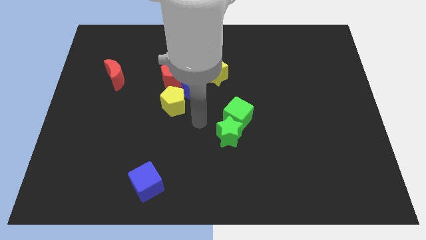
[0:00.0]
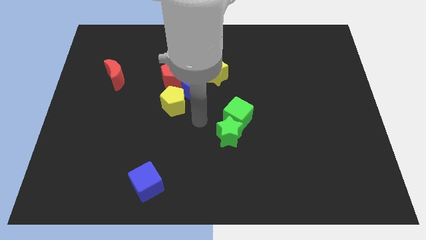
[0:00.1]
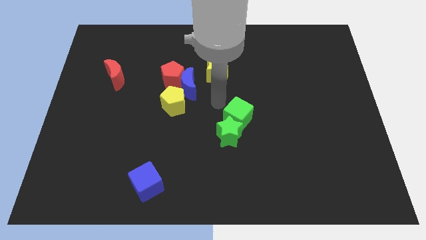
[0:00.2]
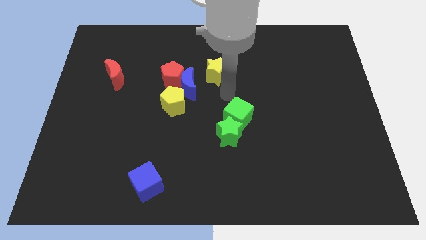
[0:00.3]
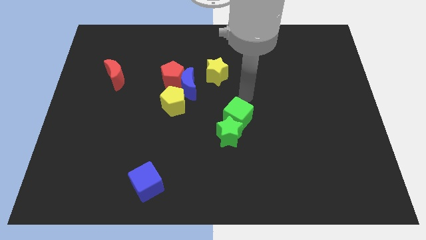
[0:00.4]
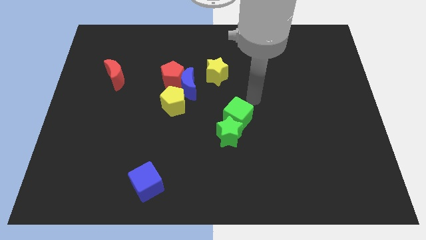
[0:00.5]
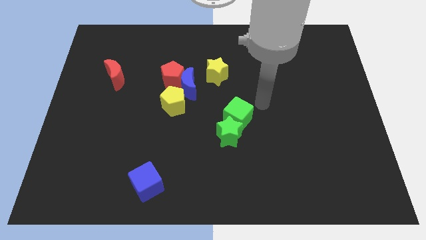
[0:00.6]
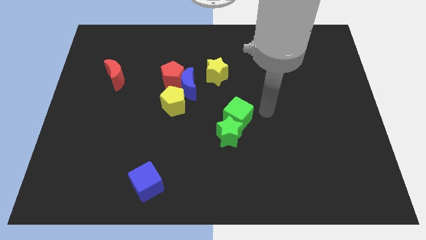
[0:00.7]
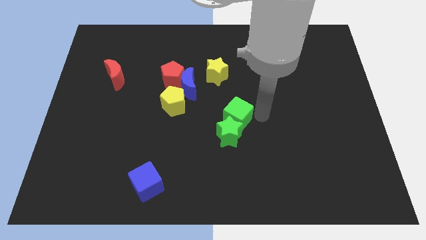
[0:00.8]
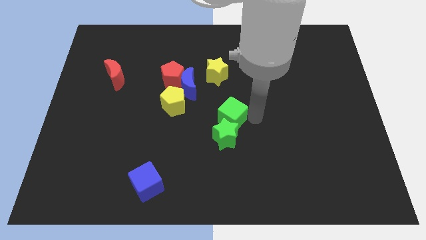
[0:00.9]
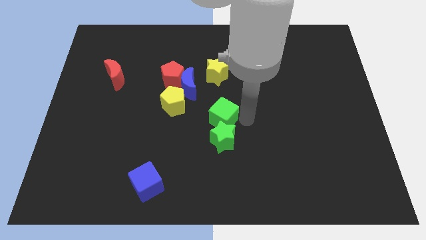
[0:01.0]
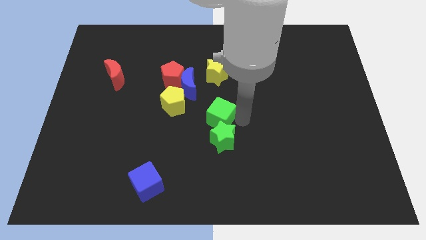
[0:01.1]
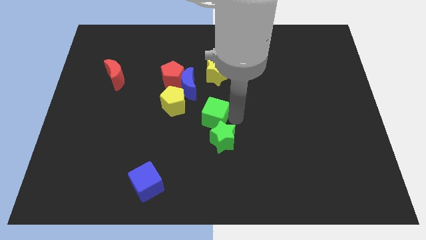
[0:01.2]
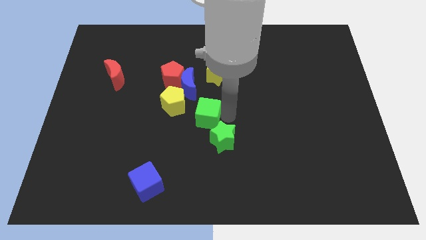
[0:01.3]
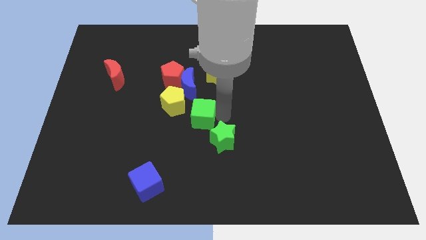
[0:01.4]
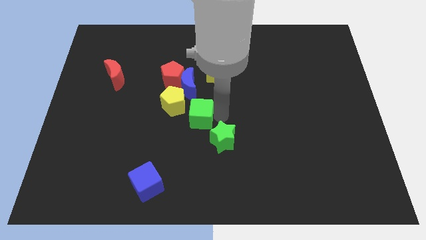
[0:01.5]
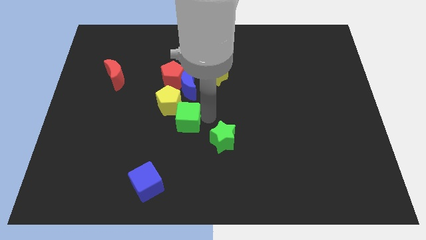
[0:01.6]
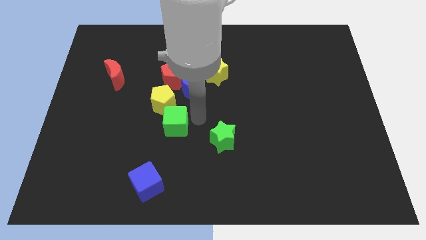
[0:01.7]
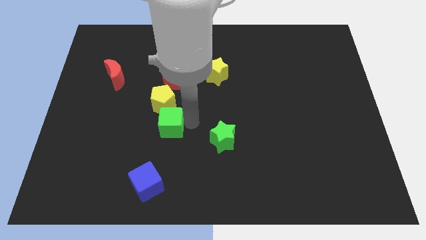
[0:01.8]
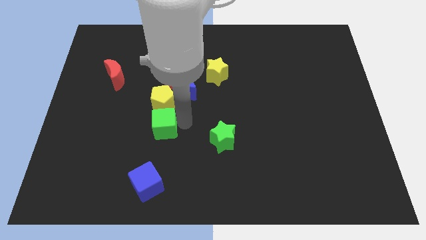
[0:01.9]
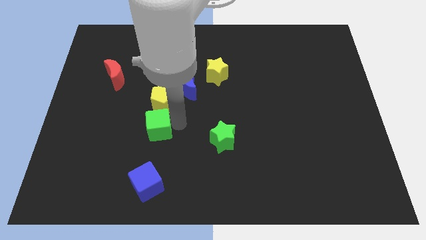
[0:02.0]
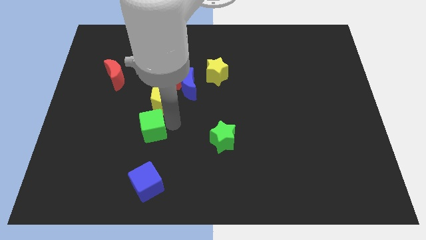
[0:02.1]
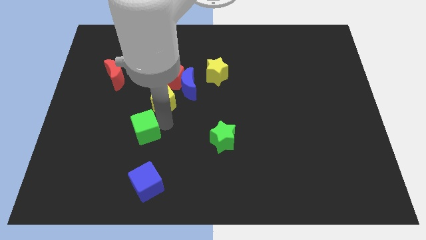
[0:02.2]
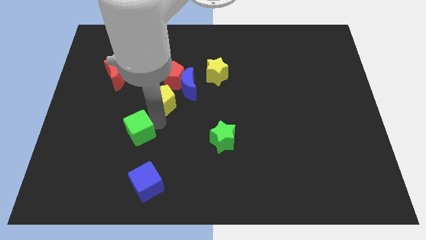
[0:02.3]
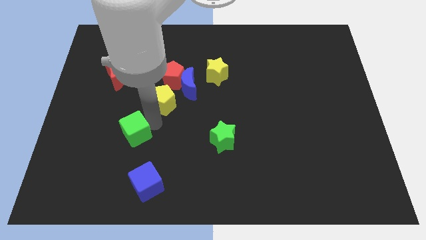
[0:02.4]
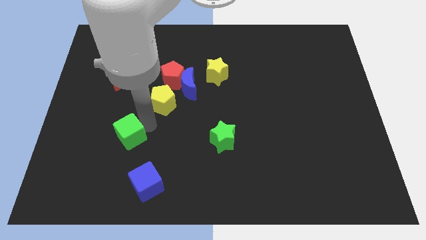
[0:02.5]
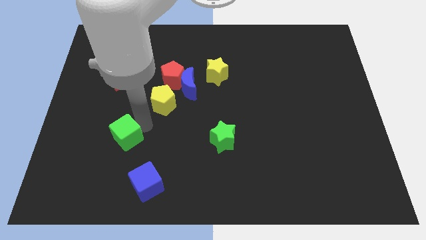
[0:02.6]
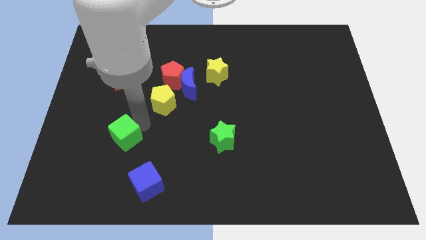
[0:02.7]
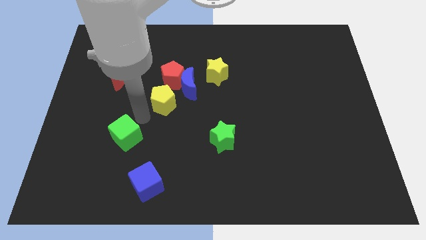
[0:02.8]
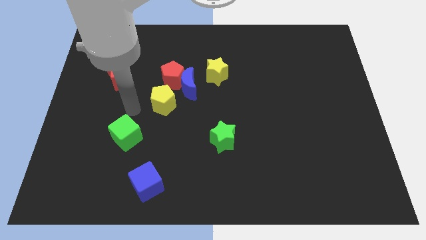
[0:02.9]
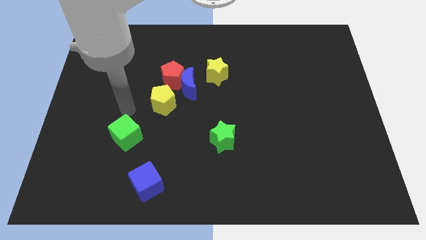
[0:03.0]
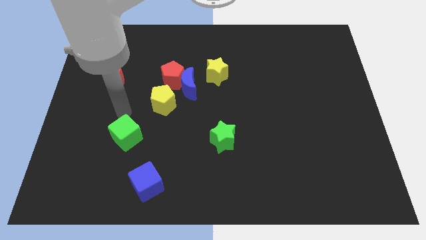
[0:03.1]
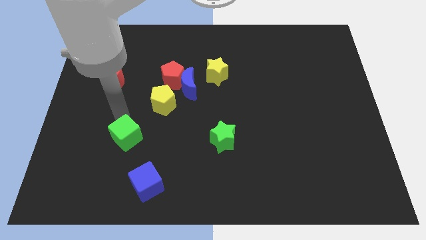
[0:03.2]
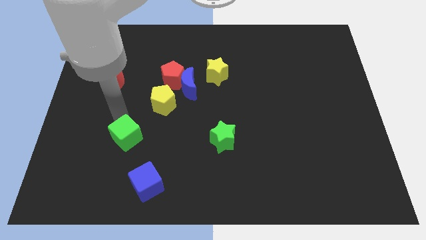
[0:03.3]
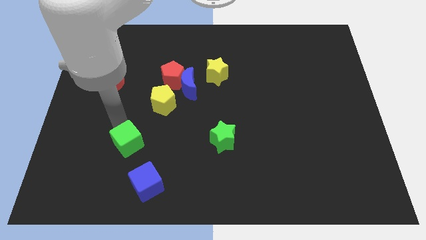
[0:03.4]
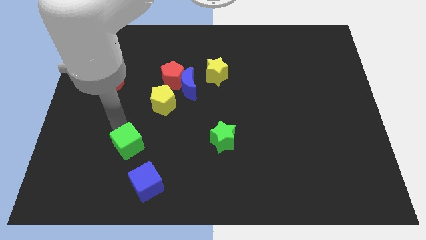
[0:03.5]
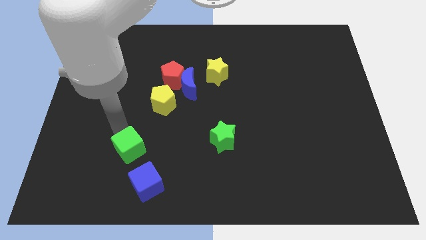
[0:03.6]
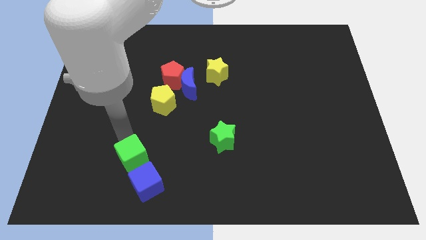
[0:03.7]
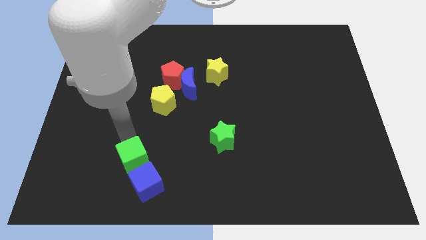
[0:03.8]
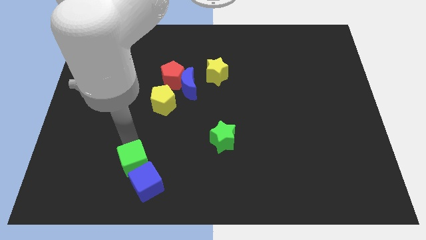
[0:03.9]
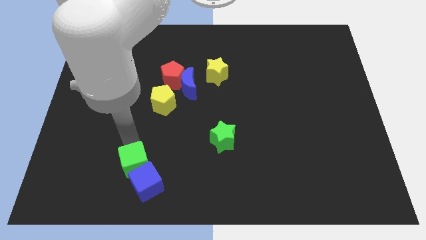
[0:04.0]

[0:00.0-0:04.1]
slide the green cube to the blue cube

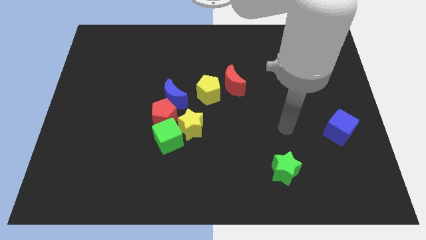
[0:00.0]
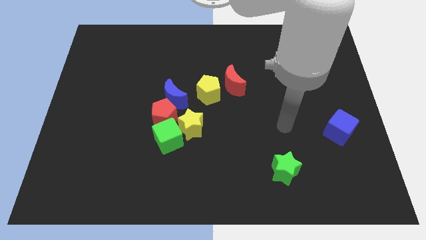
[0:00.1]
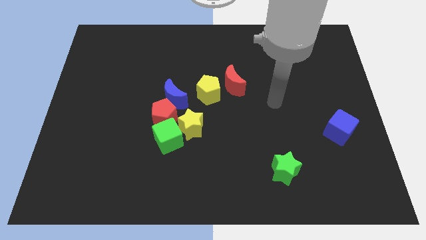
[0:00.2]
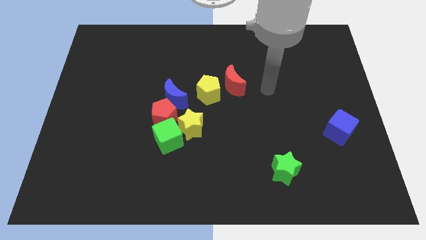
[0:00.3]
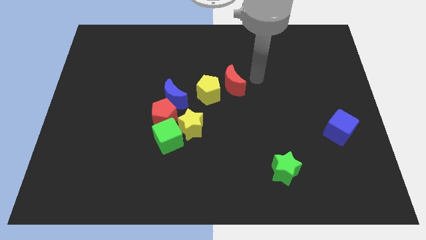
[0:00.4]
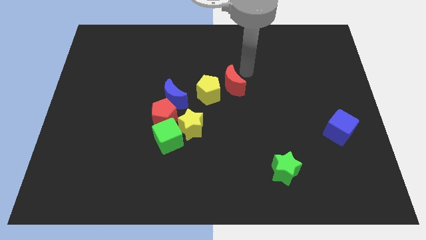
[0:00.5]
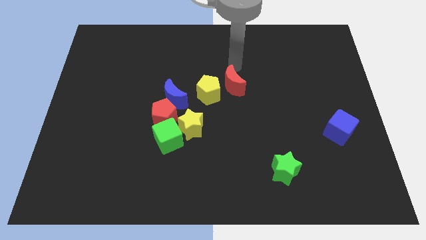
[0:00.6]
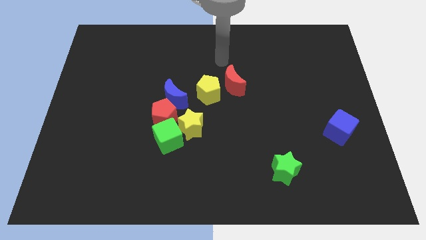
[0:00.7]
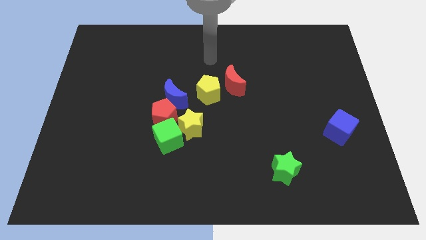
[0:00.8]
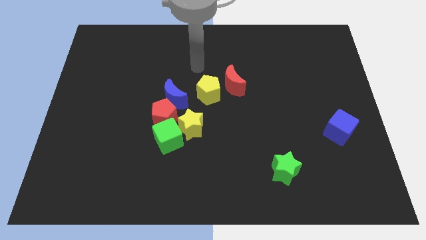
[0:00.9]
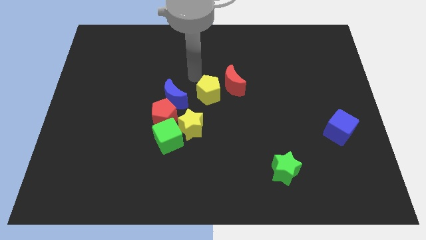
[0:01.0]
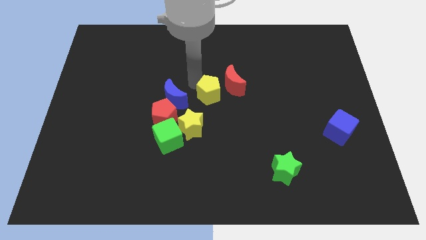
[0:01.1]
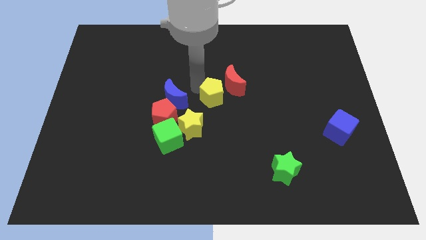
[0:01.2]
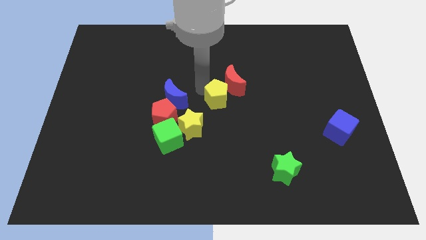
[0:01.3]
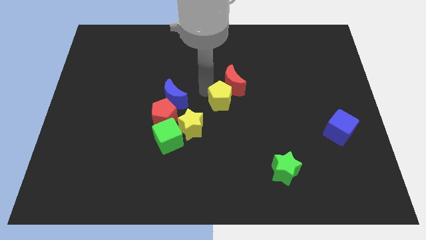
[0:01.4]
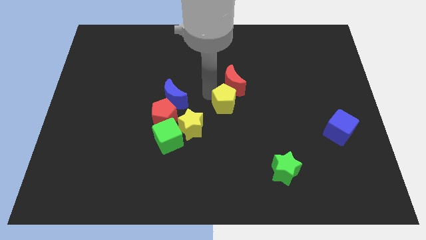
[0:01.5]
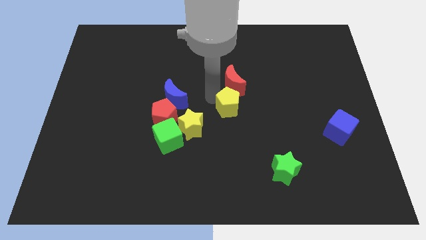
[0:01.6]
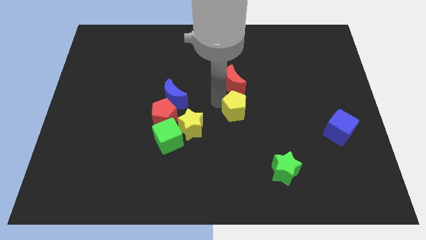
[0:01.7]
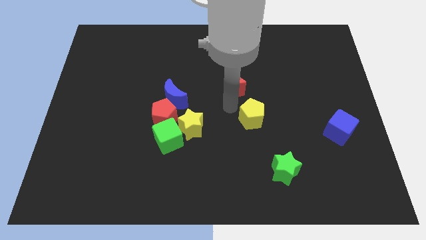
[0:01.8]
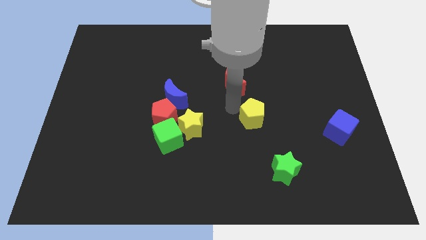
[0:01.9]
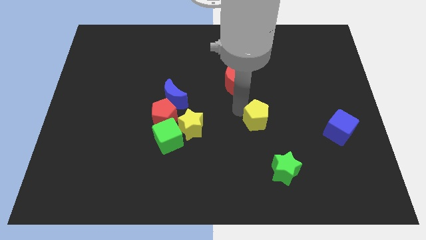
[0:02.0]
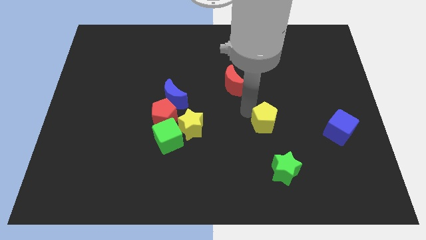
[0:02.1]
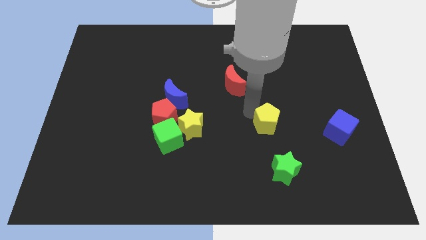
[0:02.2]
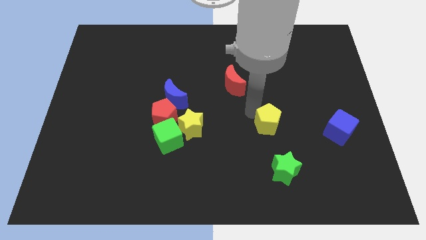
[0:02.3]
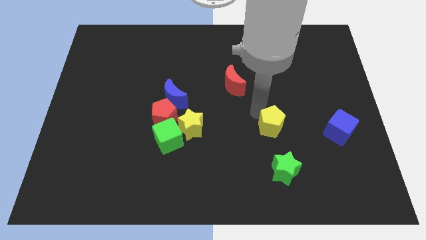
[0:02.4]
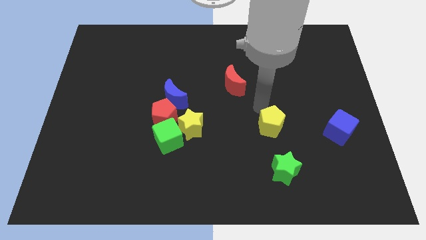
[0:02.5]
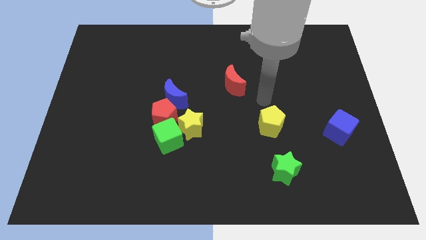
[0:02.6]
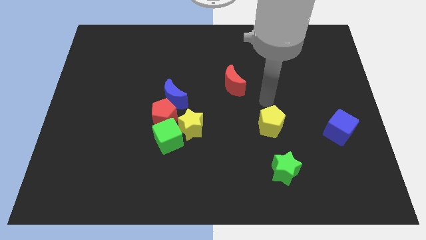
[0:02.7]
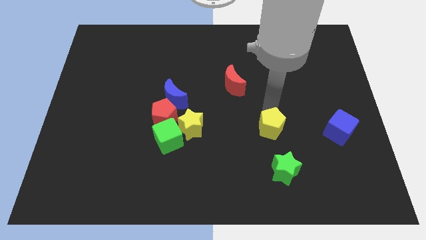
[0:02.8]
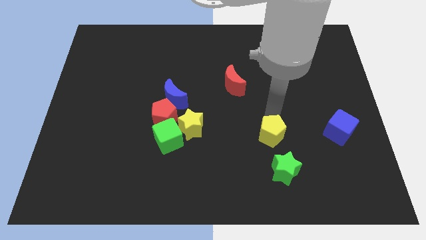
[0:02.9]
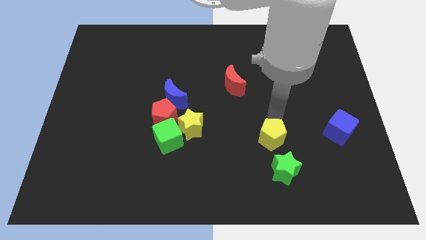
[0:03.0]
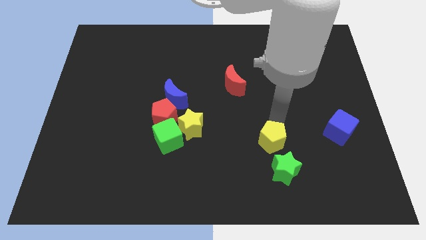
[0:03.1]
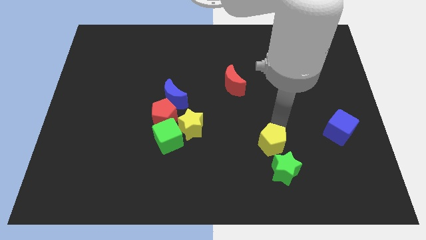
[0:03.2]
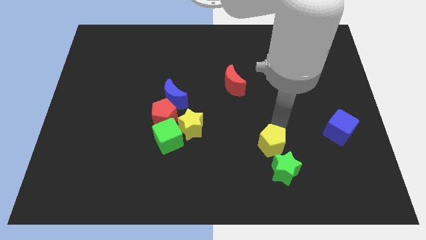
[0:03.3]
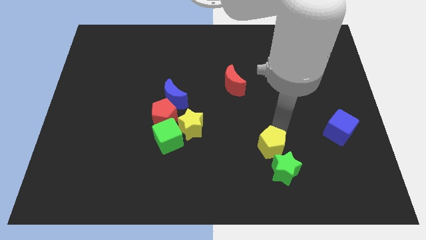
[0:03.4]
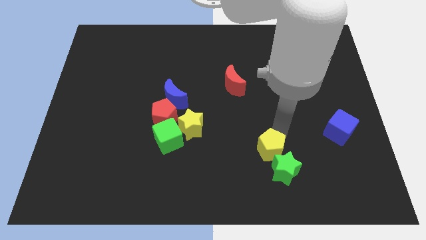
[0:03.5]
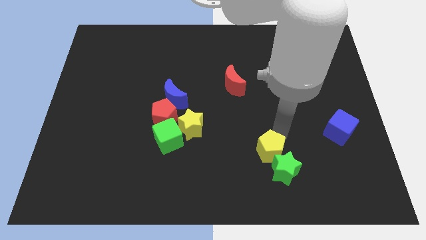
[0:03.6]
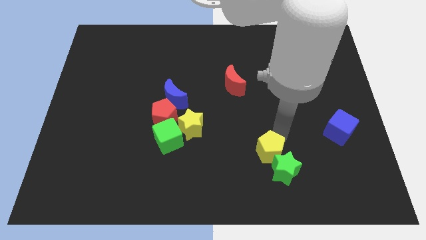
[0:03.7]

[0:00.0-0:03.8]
put the yellow pentagon to the green star
